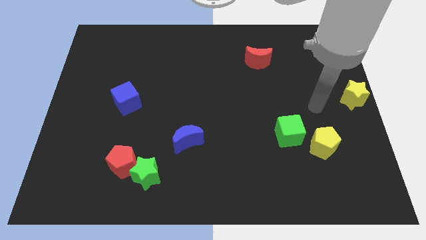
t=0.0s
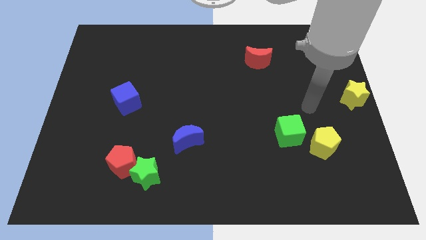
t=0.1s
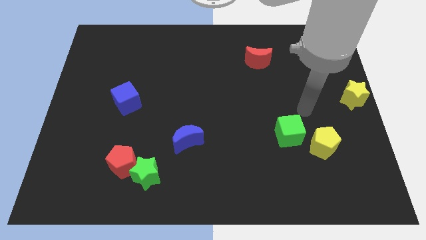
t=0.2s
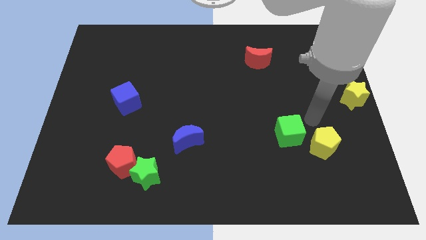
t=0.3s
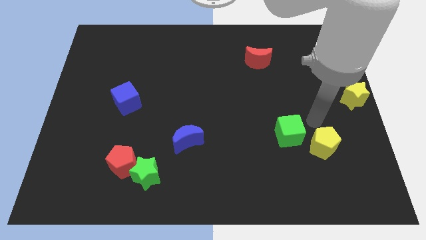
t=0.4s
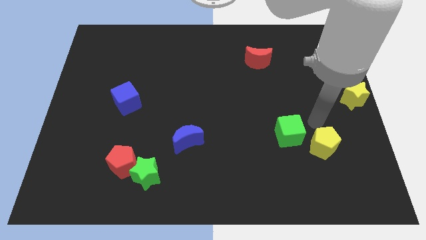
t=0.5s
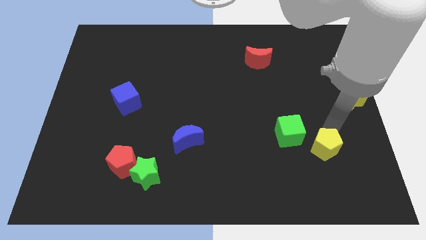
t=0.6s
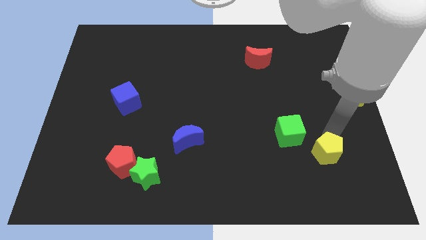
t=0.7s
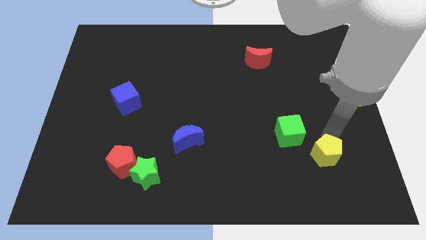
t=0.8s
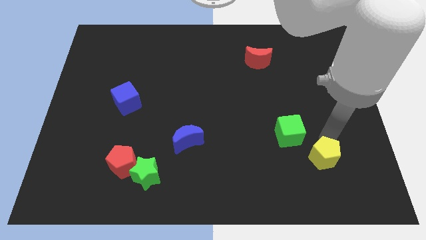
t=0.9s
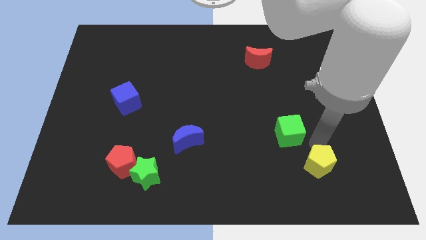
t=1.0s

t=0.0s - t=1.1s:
move the yellow pentagon below the green cube

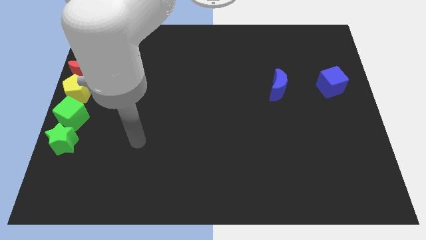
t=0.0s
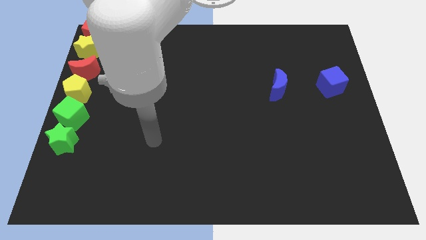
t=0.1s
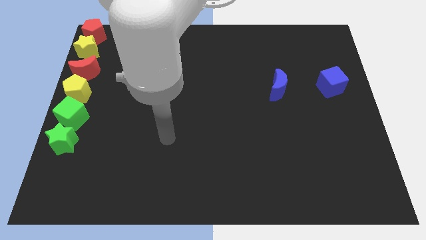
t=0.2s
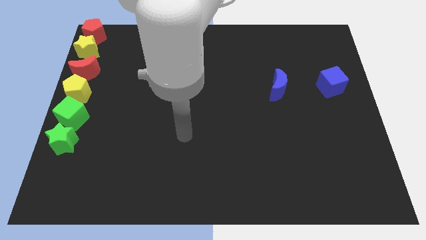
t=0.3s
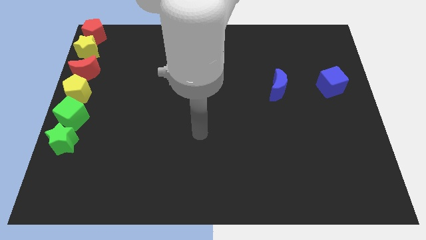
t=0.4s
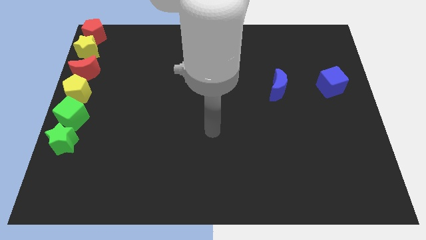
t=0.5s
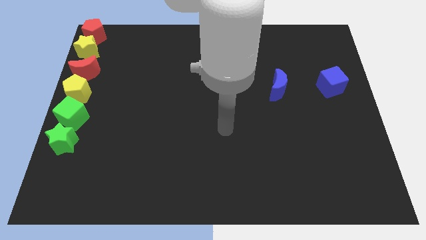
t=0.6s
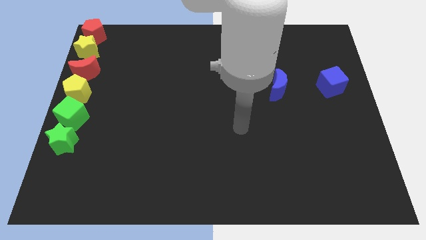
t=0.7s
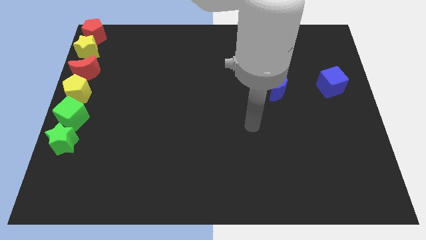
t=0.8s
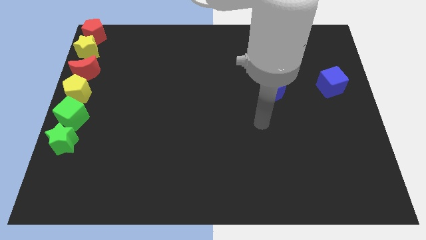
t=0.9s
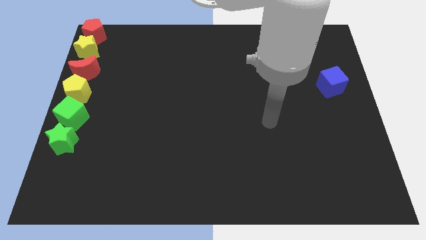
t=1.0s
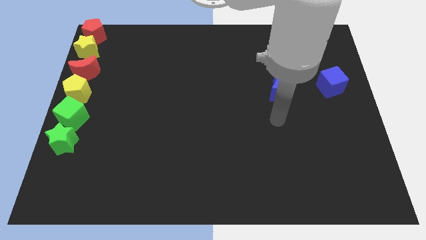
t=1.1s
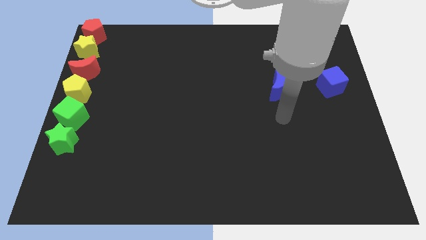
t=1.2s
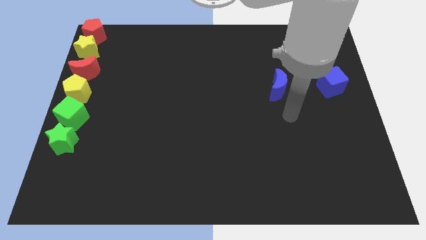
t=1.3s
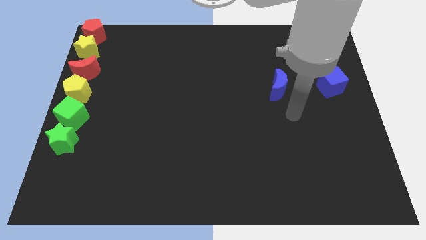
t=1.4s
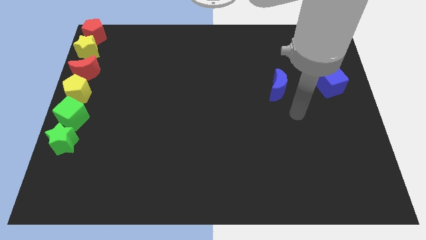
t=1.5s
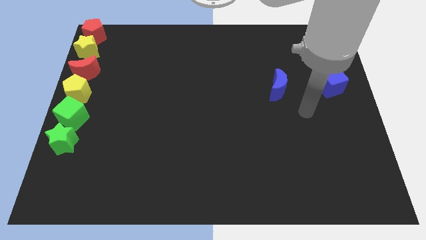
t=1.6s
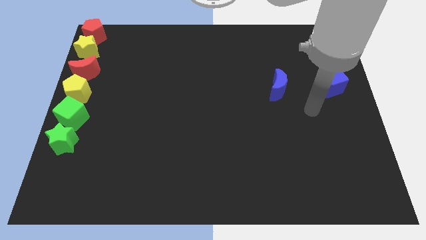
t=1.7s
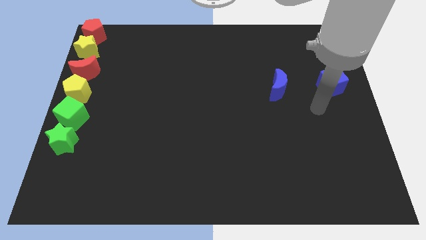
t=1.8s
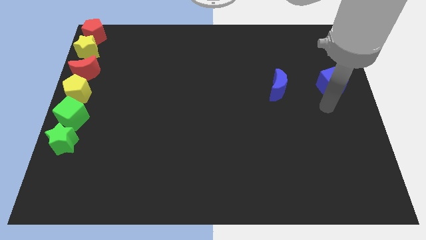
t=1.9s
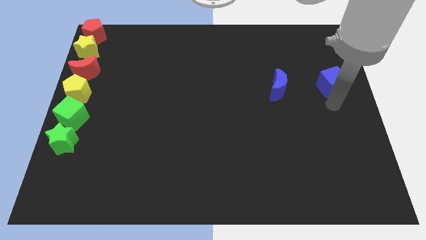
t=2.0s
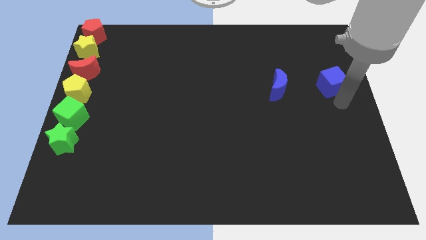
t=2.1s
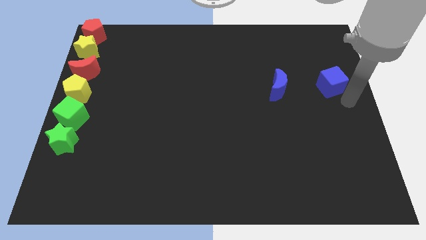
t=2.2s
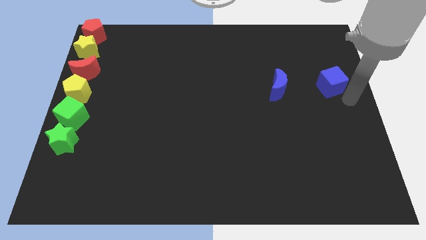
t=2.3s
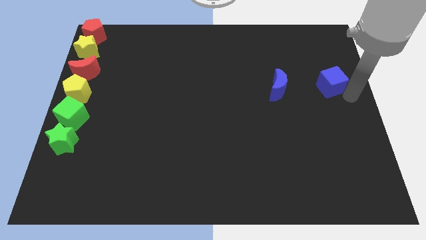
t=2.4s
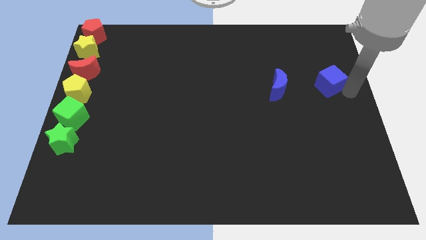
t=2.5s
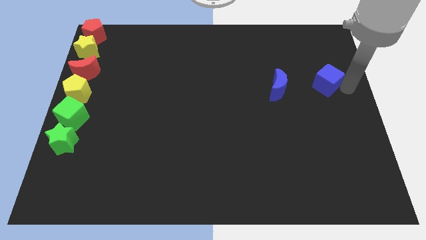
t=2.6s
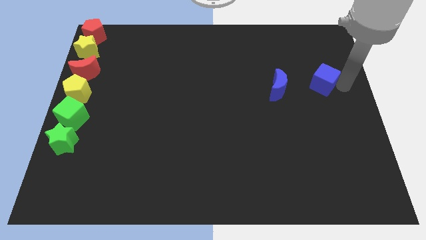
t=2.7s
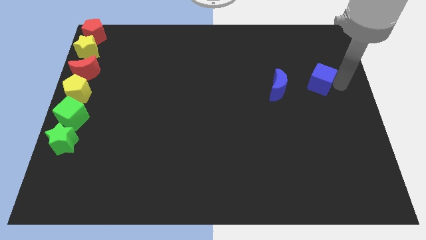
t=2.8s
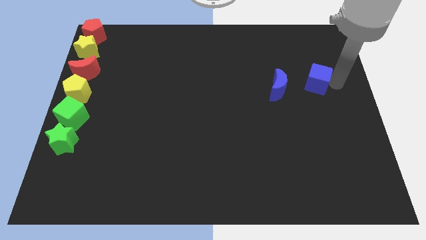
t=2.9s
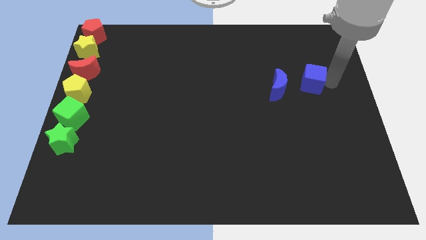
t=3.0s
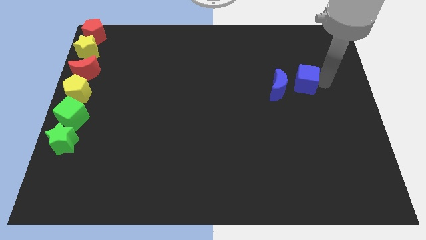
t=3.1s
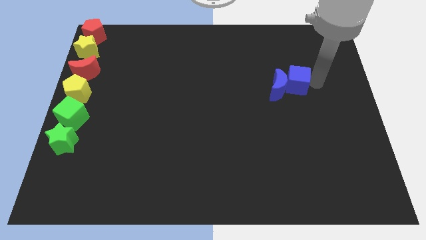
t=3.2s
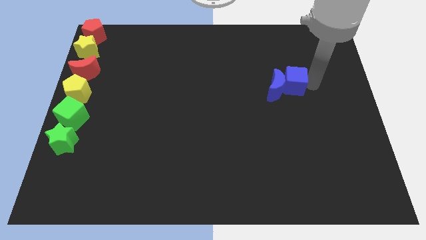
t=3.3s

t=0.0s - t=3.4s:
push the blue cube into blue crescent

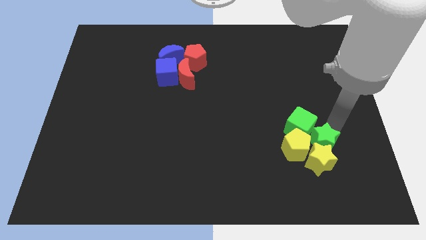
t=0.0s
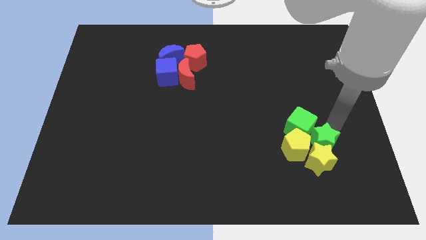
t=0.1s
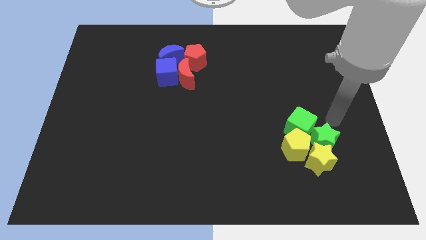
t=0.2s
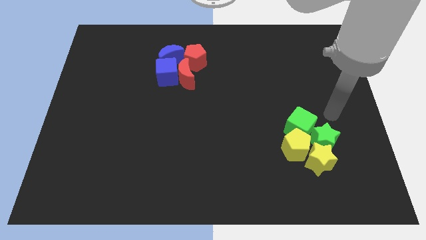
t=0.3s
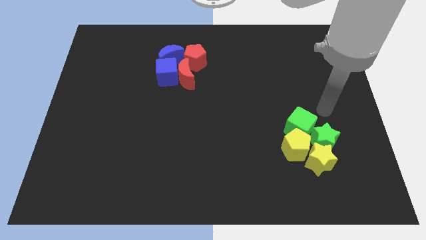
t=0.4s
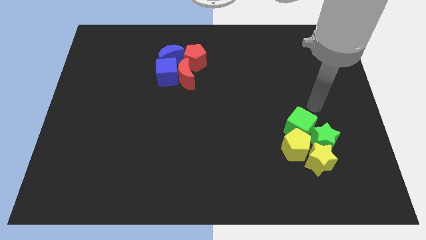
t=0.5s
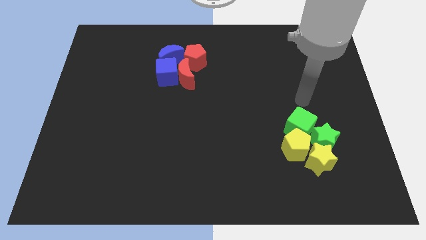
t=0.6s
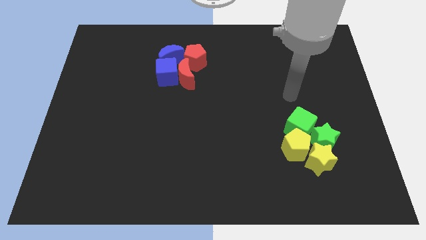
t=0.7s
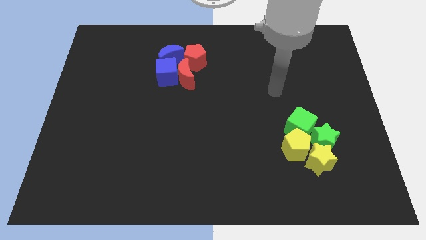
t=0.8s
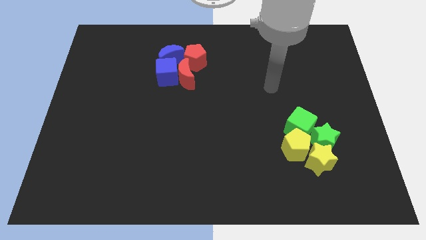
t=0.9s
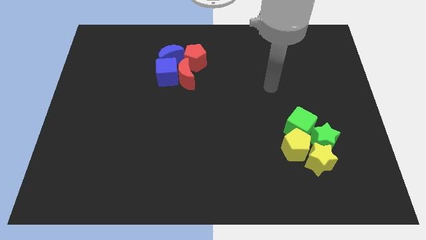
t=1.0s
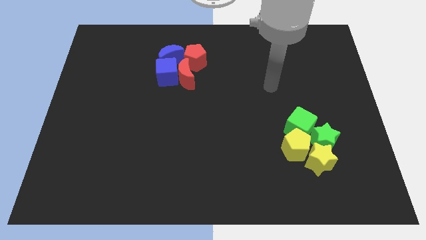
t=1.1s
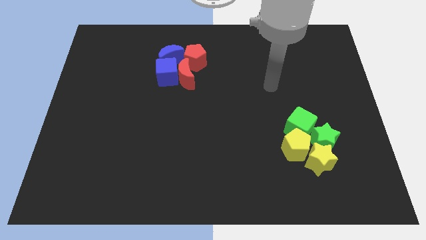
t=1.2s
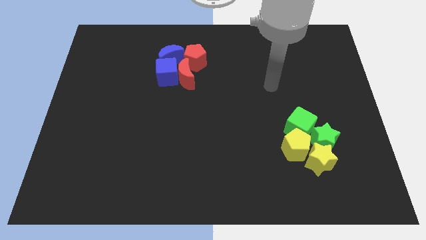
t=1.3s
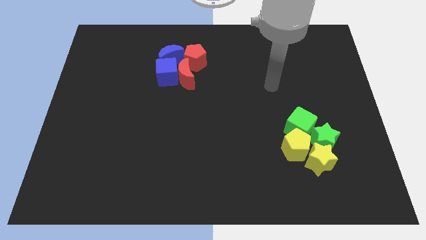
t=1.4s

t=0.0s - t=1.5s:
push your arm parallel to the red moon

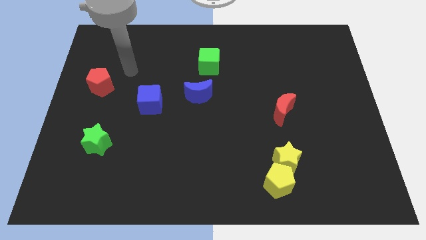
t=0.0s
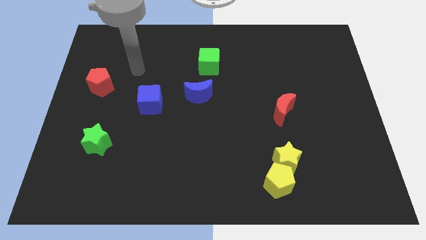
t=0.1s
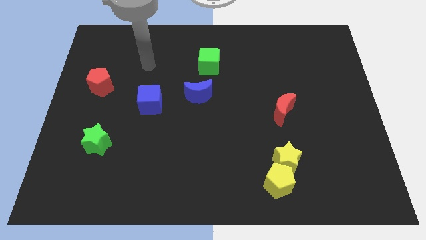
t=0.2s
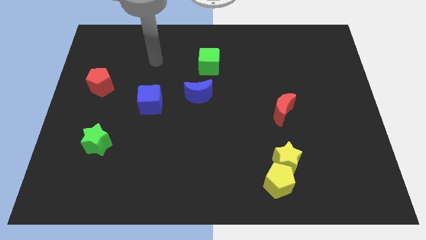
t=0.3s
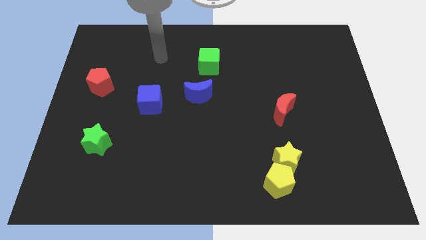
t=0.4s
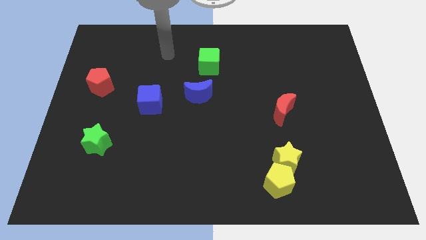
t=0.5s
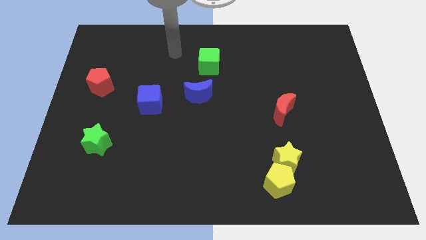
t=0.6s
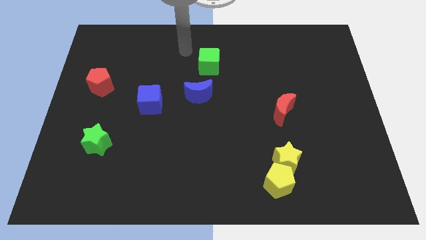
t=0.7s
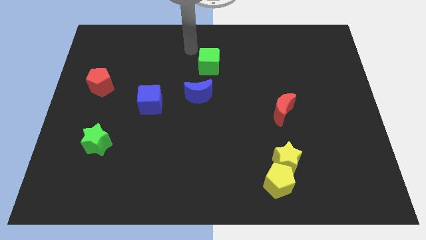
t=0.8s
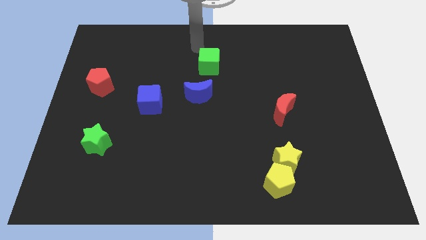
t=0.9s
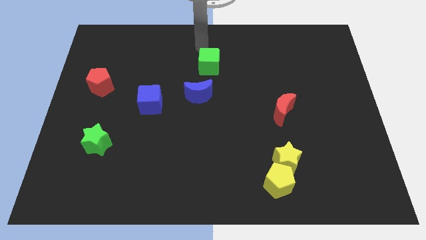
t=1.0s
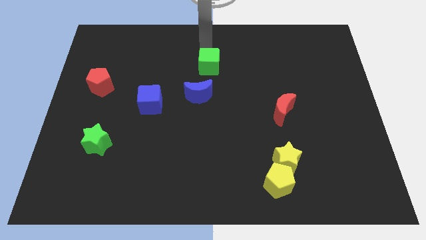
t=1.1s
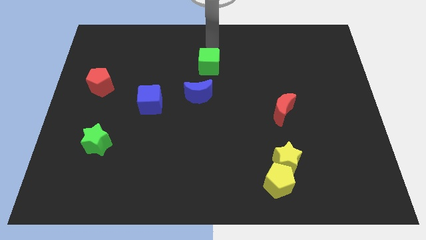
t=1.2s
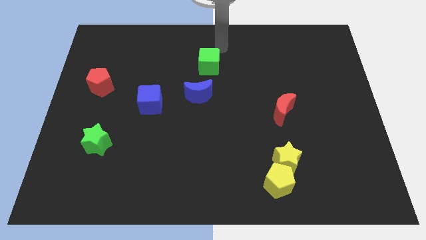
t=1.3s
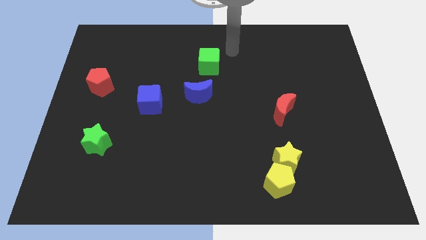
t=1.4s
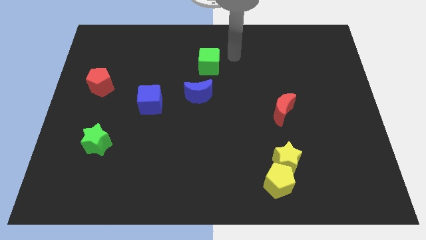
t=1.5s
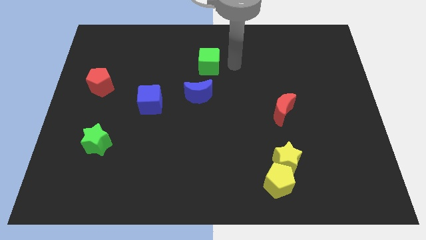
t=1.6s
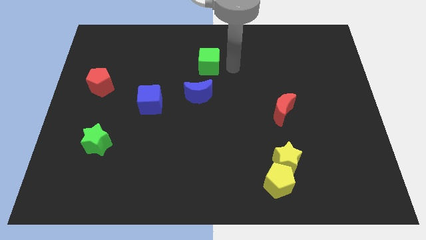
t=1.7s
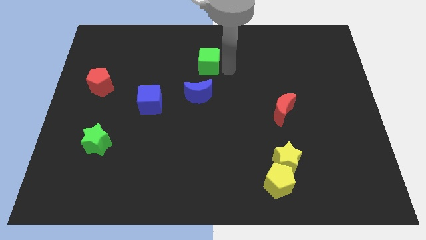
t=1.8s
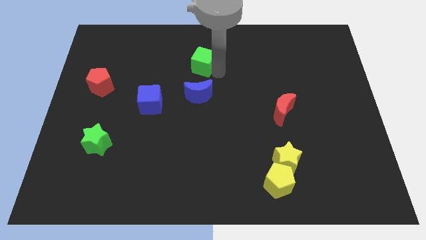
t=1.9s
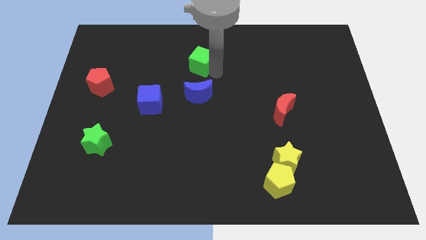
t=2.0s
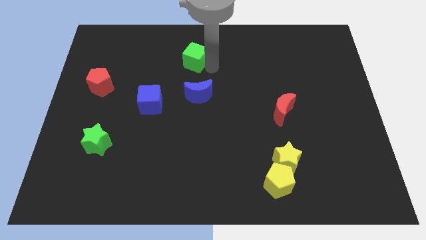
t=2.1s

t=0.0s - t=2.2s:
move the green cube to the top center of the board

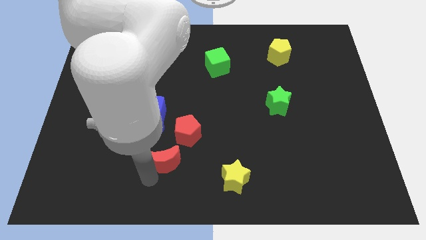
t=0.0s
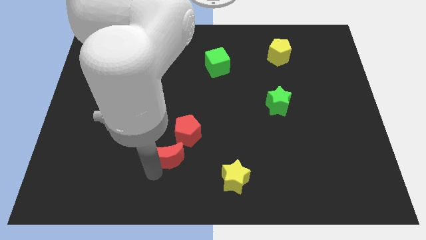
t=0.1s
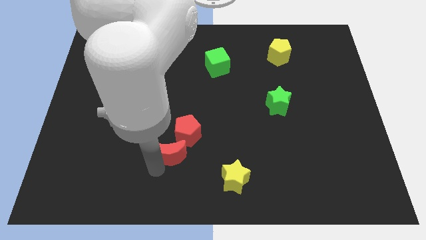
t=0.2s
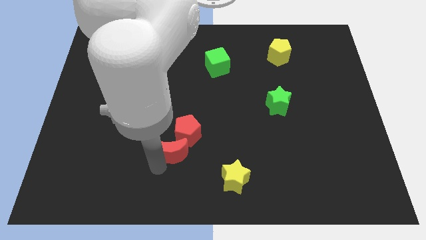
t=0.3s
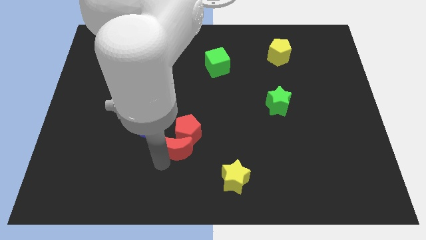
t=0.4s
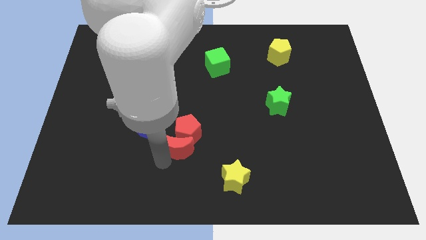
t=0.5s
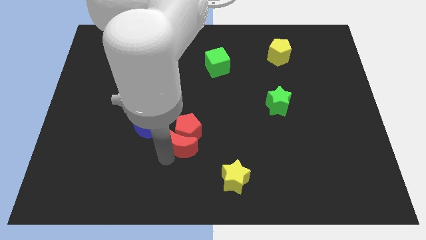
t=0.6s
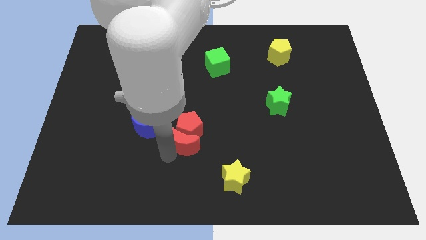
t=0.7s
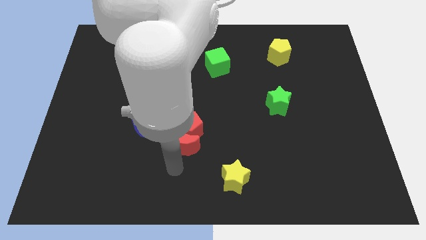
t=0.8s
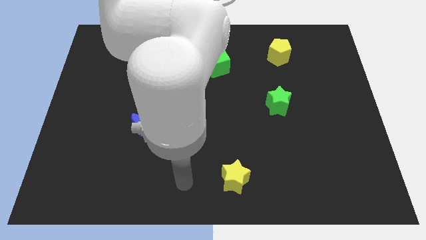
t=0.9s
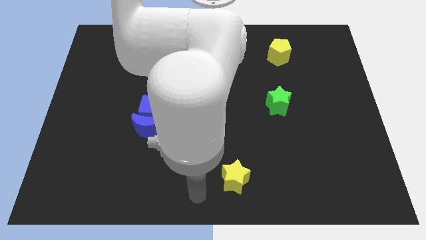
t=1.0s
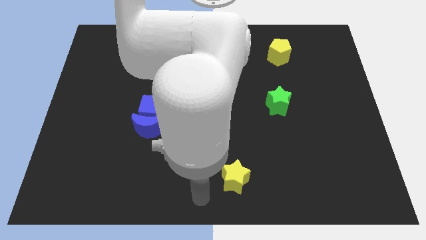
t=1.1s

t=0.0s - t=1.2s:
move your arm to the bottom center
